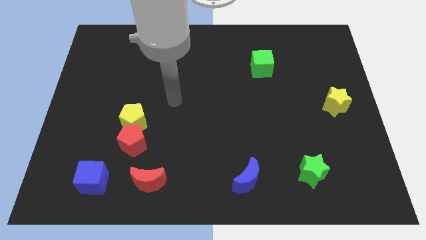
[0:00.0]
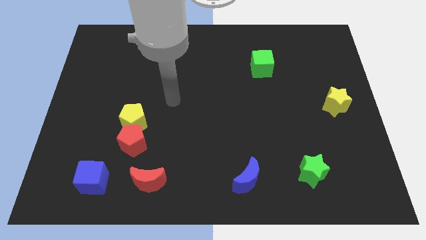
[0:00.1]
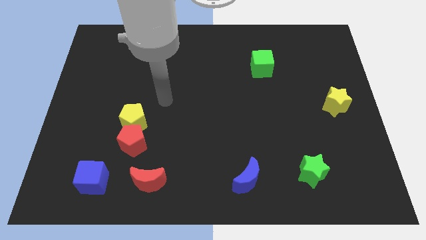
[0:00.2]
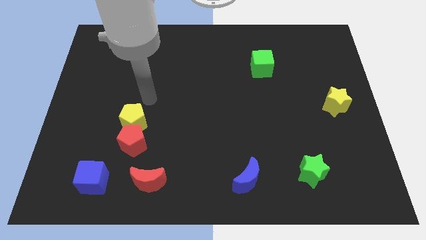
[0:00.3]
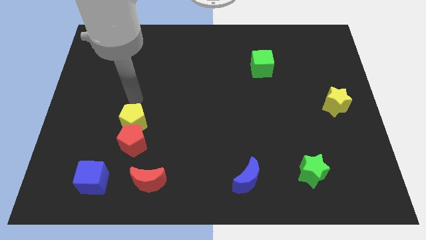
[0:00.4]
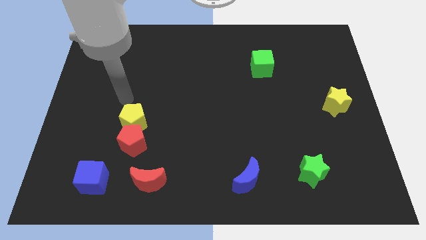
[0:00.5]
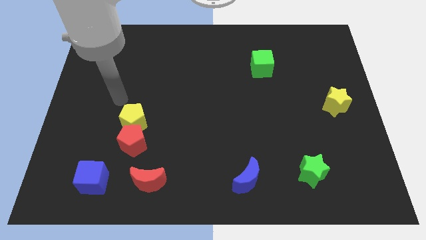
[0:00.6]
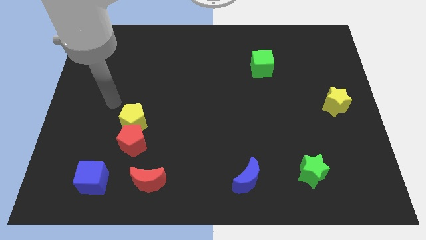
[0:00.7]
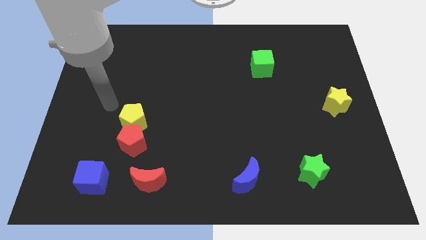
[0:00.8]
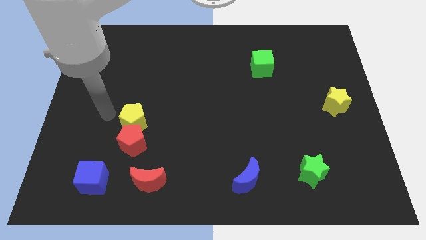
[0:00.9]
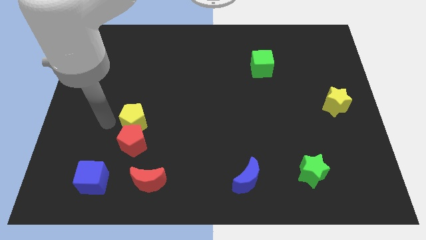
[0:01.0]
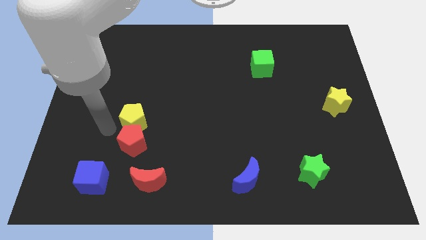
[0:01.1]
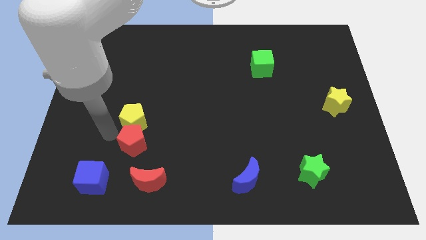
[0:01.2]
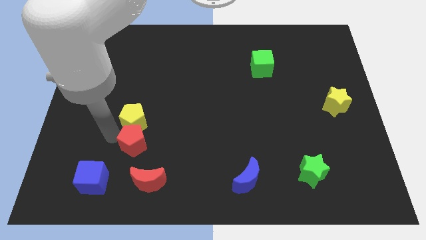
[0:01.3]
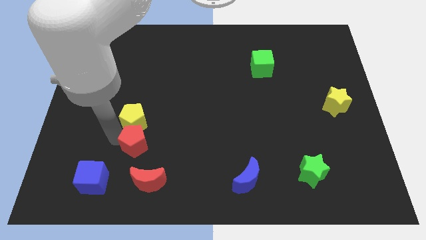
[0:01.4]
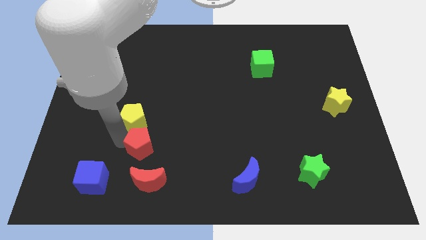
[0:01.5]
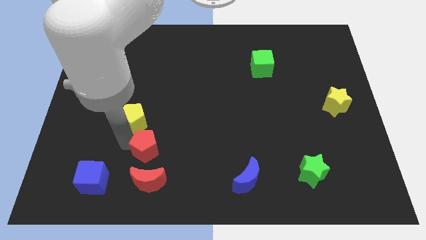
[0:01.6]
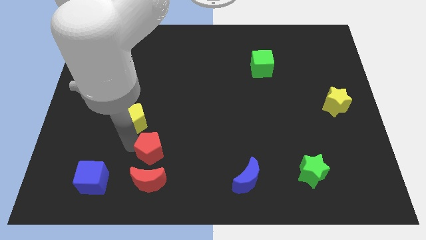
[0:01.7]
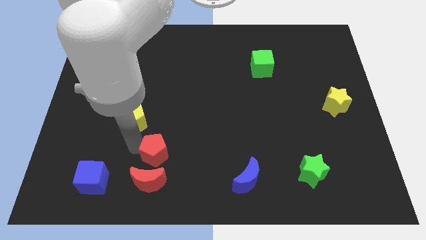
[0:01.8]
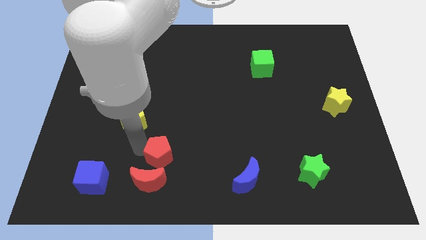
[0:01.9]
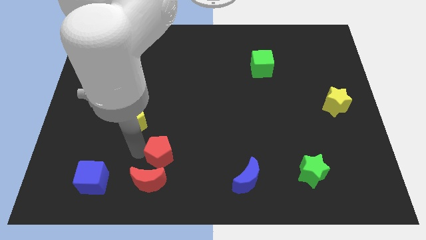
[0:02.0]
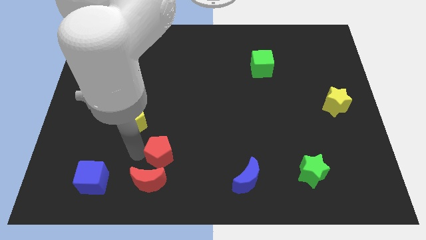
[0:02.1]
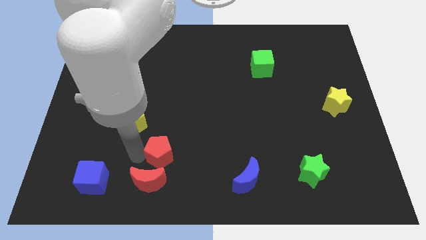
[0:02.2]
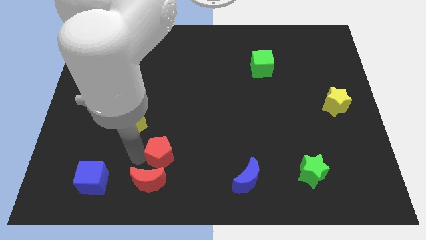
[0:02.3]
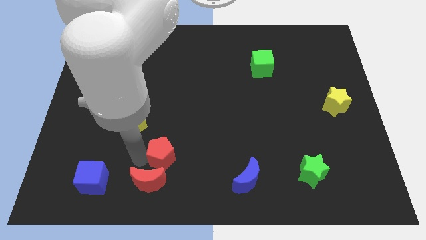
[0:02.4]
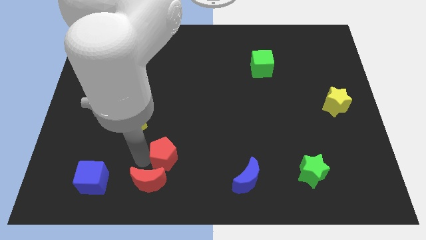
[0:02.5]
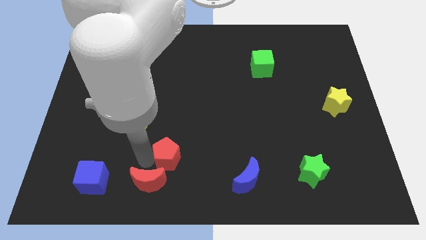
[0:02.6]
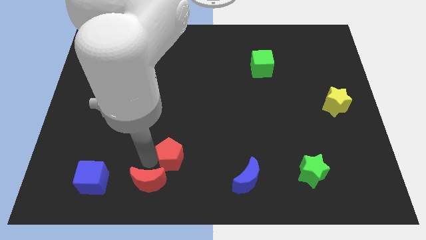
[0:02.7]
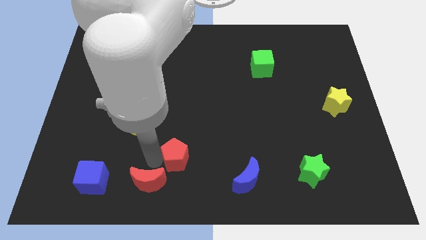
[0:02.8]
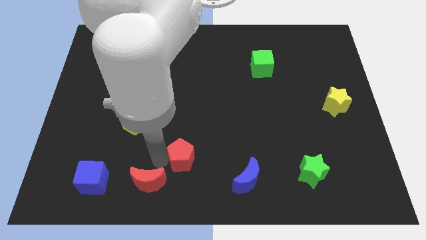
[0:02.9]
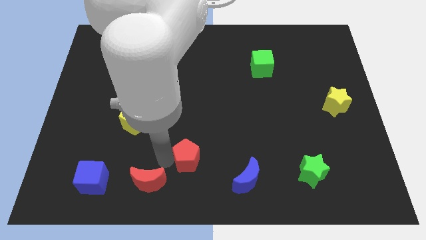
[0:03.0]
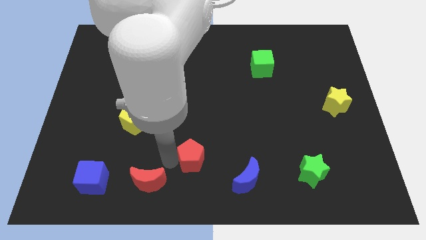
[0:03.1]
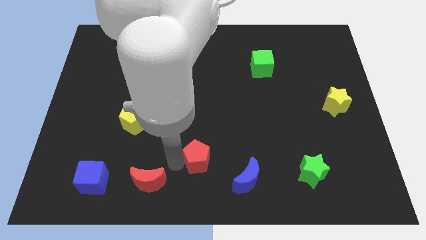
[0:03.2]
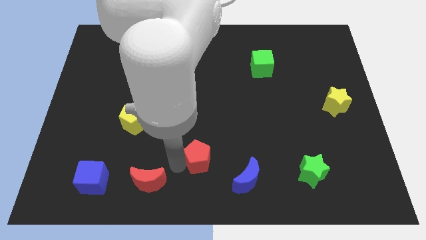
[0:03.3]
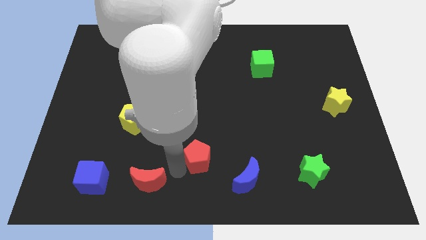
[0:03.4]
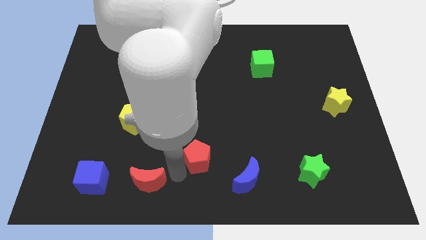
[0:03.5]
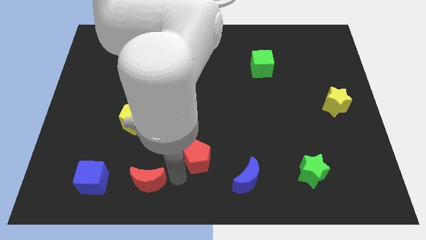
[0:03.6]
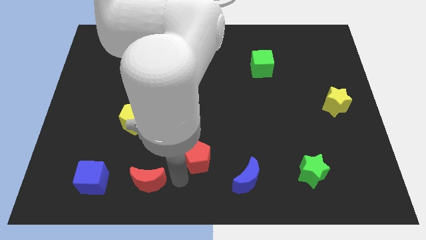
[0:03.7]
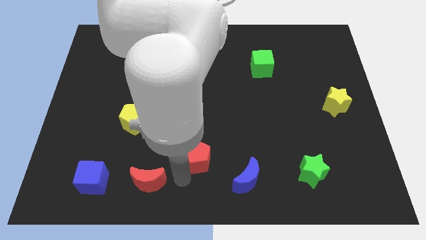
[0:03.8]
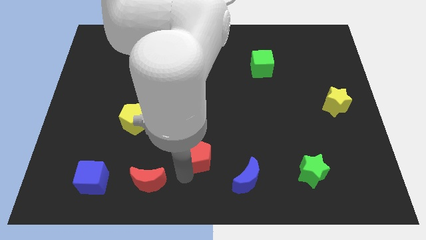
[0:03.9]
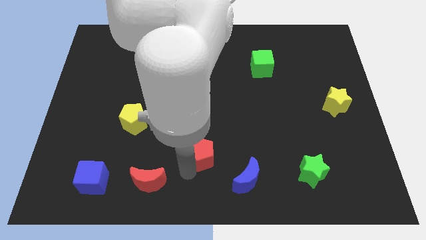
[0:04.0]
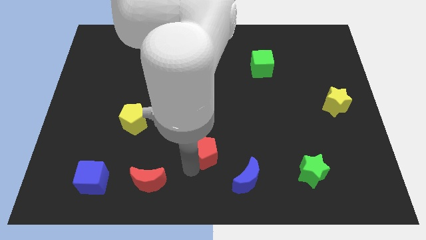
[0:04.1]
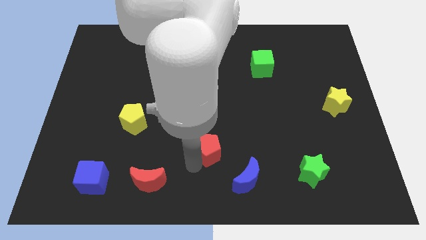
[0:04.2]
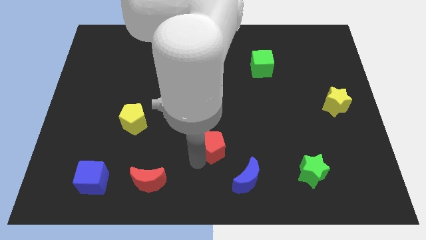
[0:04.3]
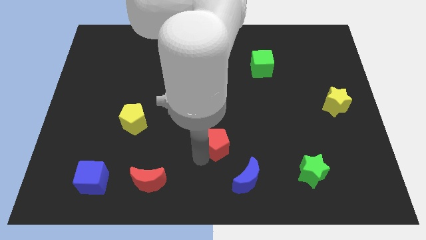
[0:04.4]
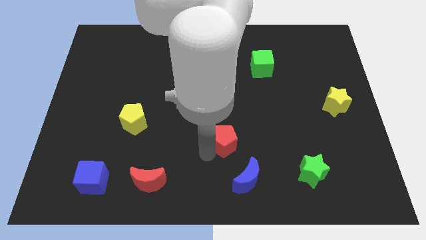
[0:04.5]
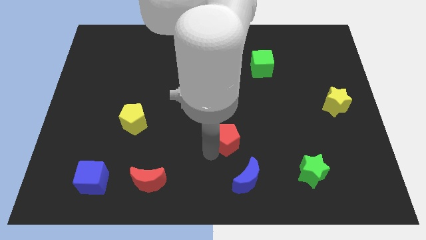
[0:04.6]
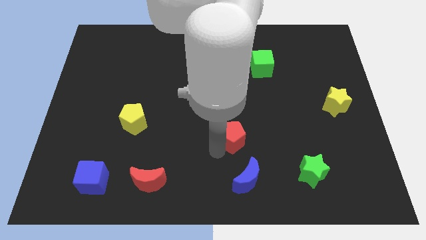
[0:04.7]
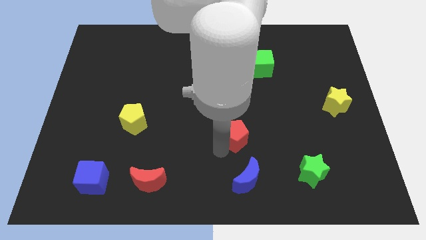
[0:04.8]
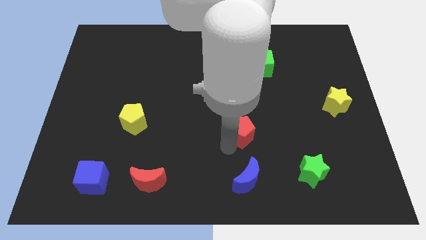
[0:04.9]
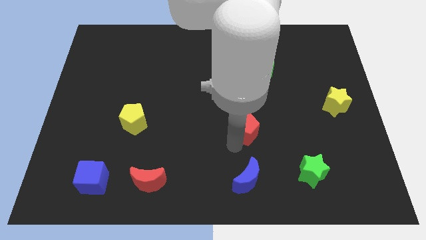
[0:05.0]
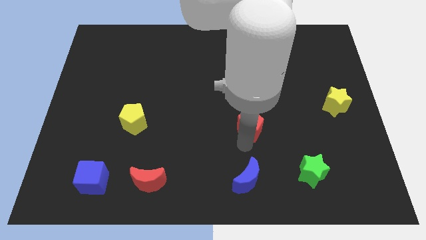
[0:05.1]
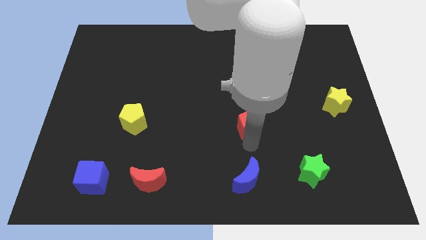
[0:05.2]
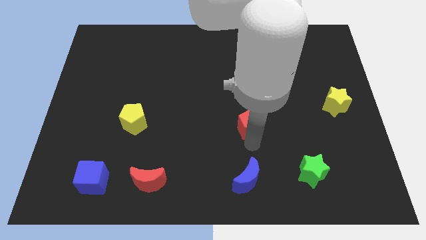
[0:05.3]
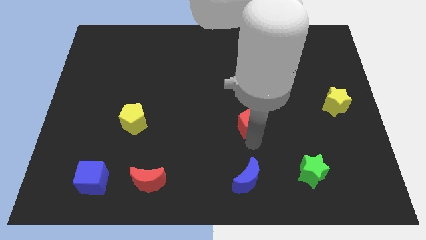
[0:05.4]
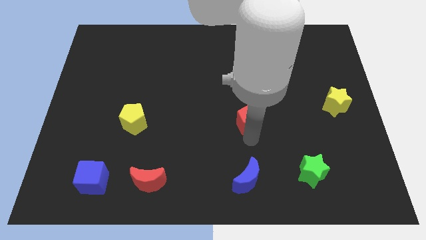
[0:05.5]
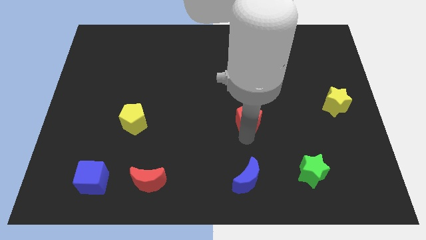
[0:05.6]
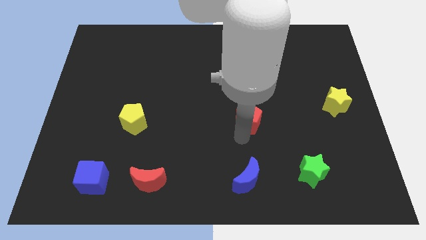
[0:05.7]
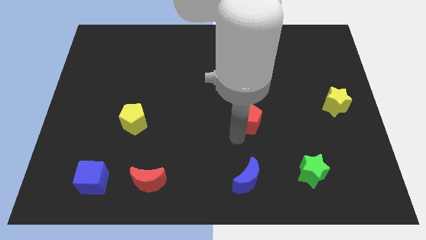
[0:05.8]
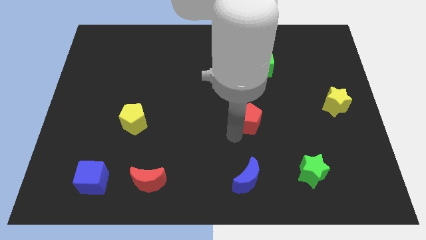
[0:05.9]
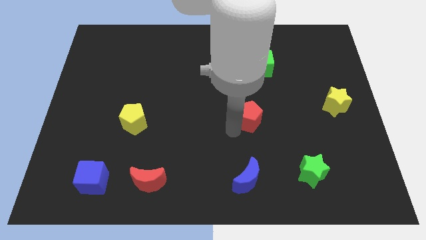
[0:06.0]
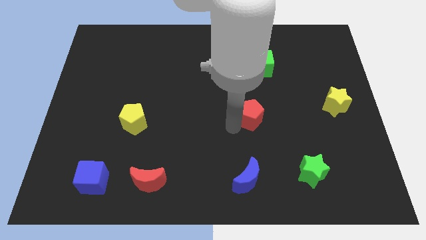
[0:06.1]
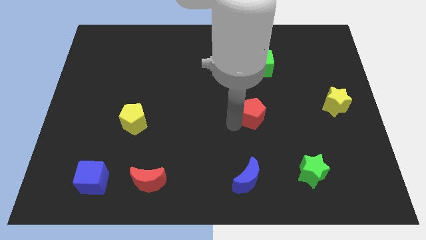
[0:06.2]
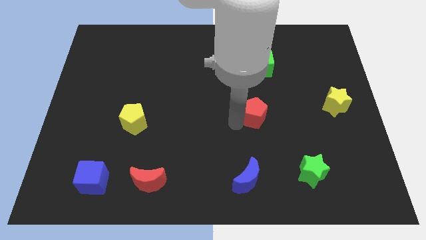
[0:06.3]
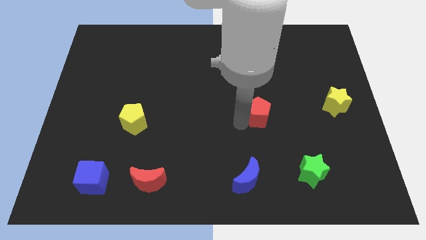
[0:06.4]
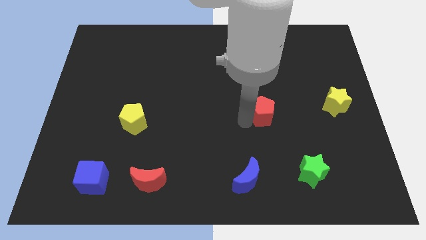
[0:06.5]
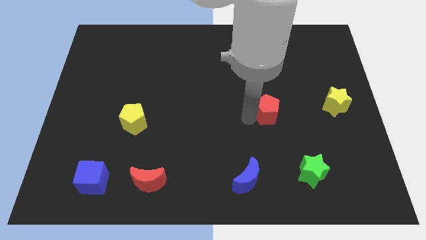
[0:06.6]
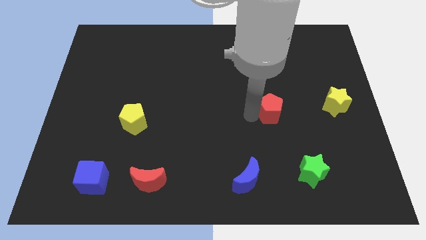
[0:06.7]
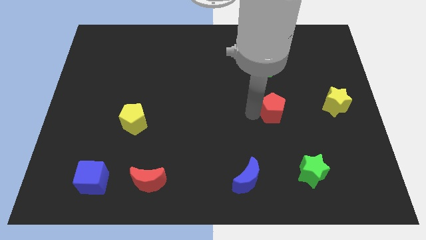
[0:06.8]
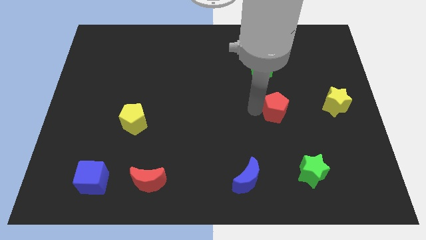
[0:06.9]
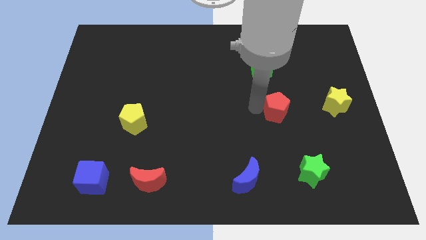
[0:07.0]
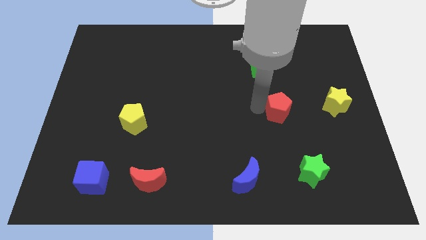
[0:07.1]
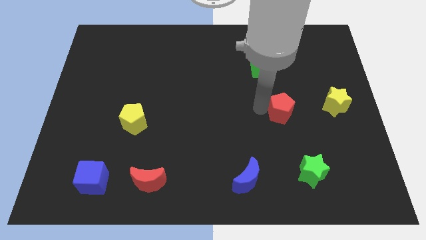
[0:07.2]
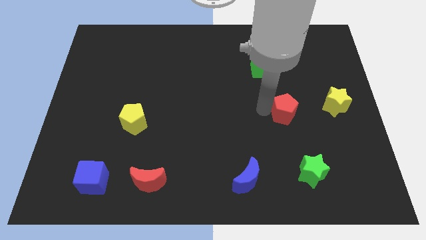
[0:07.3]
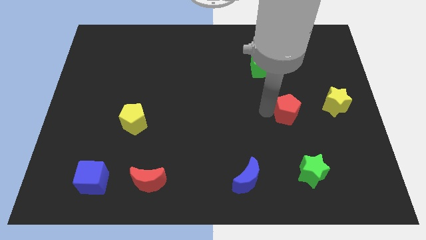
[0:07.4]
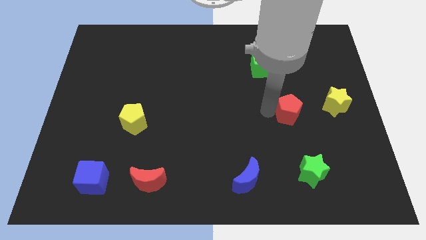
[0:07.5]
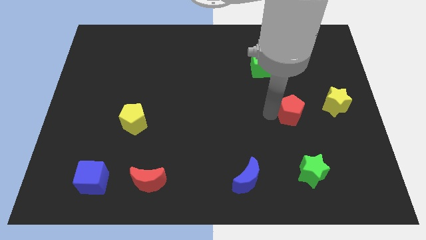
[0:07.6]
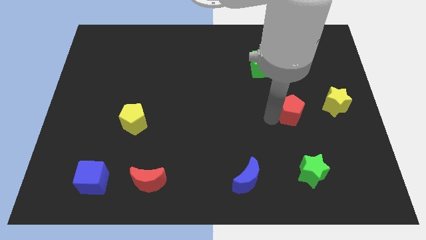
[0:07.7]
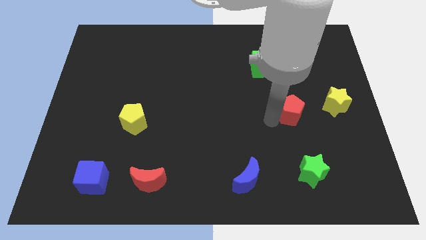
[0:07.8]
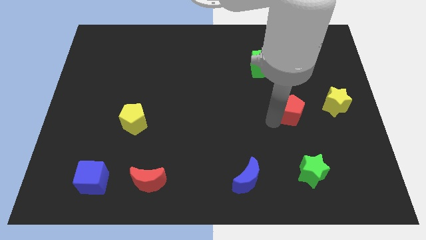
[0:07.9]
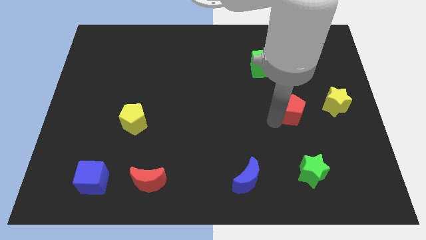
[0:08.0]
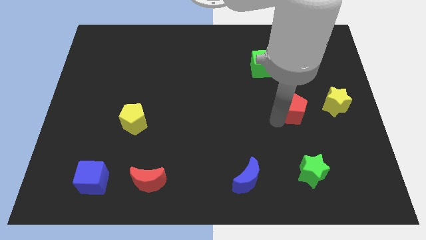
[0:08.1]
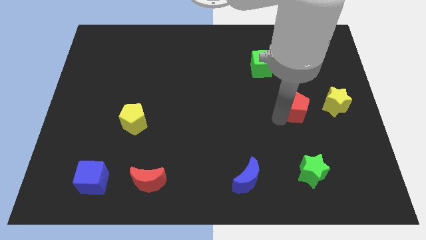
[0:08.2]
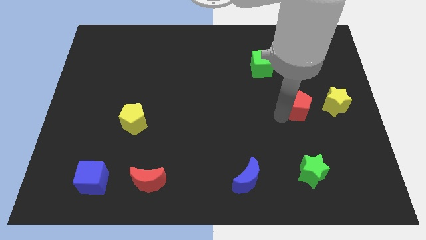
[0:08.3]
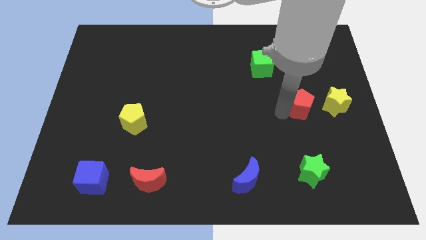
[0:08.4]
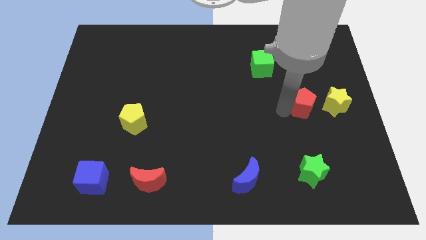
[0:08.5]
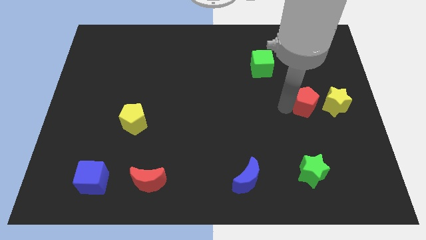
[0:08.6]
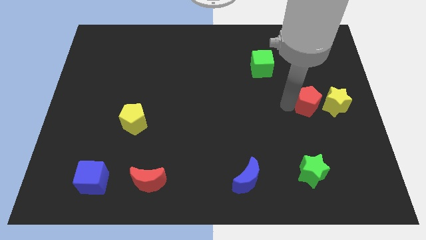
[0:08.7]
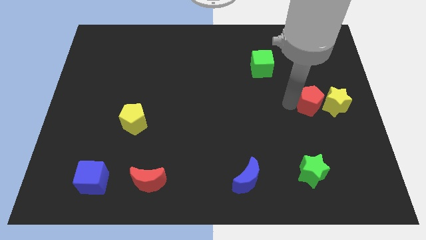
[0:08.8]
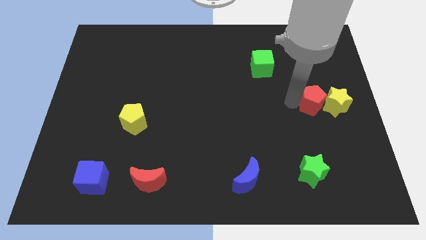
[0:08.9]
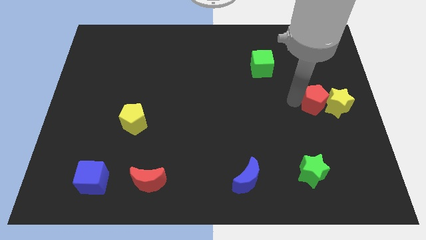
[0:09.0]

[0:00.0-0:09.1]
push the red pentagon close to the yellow star
